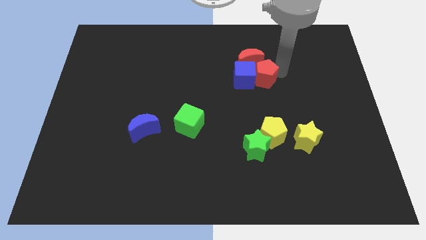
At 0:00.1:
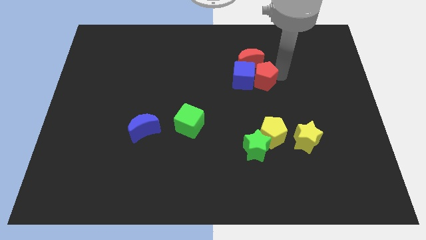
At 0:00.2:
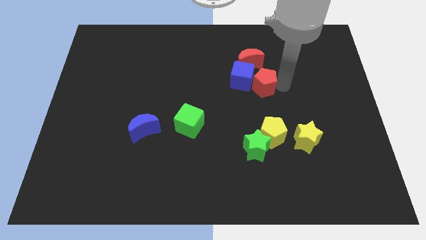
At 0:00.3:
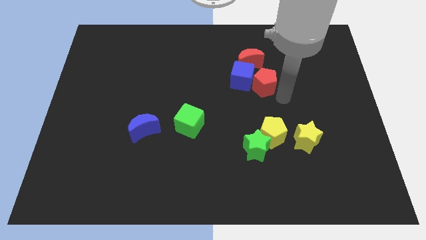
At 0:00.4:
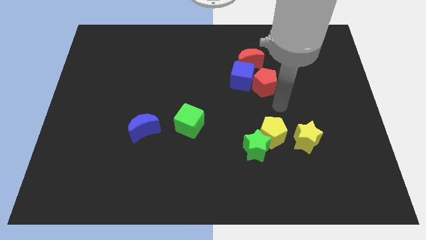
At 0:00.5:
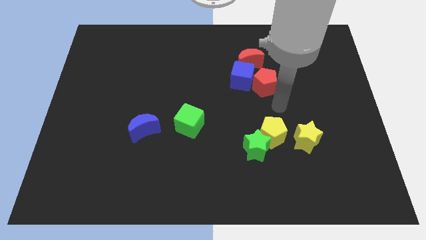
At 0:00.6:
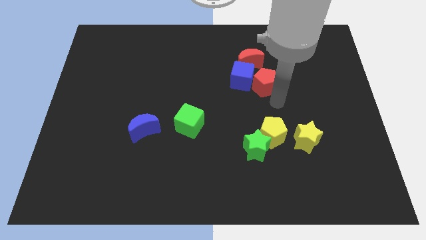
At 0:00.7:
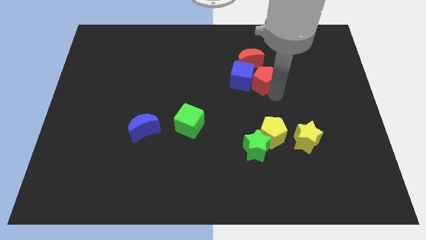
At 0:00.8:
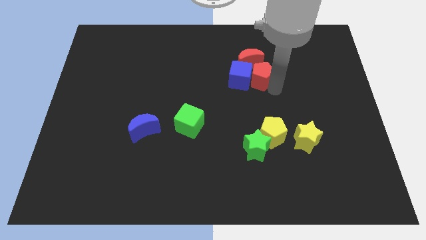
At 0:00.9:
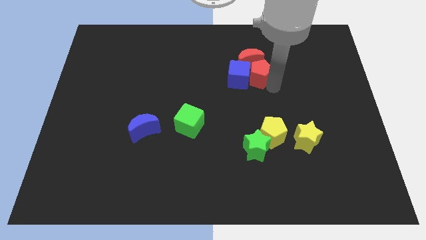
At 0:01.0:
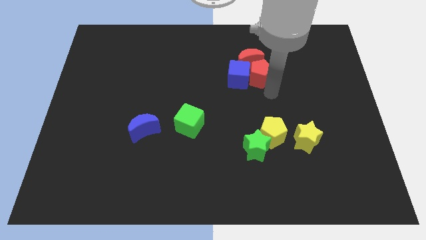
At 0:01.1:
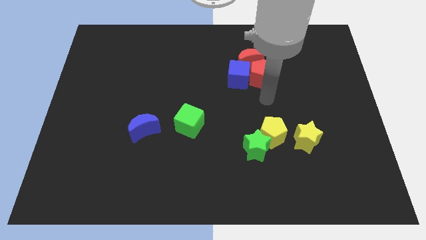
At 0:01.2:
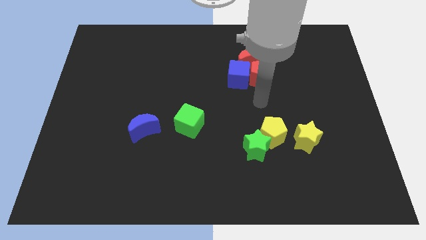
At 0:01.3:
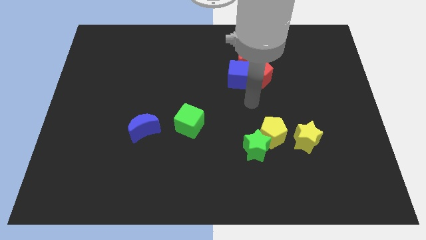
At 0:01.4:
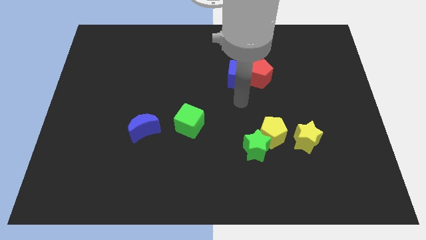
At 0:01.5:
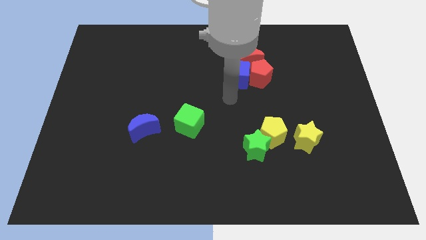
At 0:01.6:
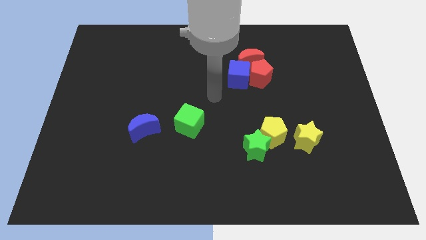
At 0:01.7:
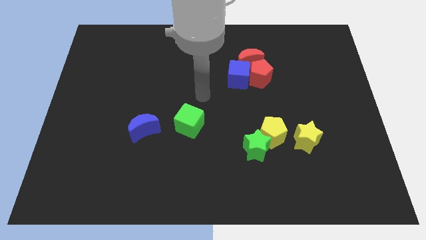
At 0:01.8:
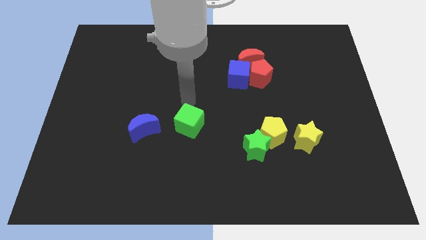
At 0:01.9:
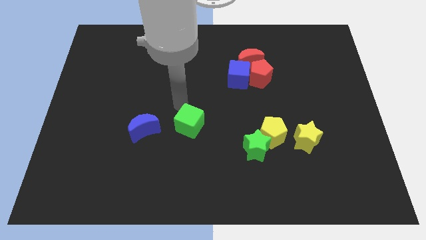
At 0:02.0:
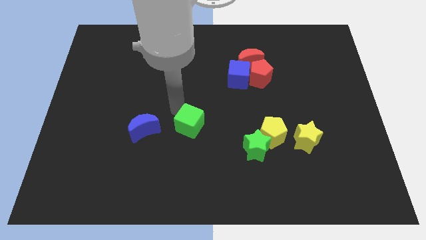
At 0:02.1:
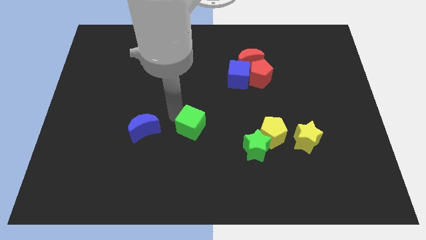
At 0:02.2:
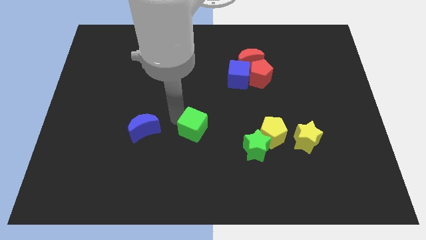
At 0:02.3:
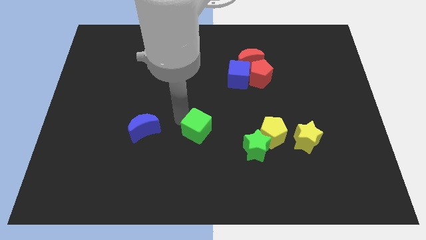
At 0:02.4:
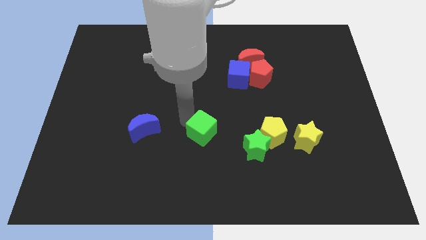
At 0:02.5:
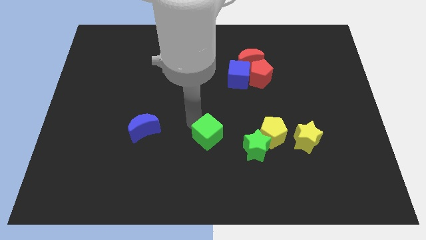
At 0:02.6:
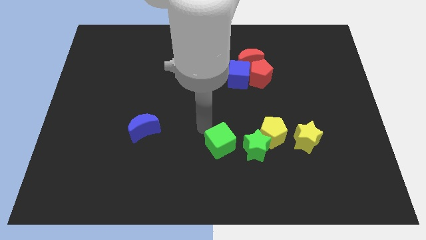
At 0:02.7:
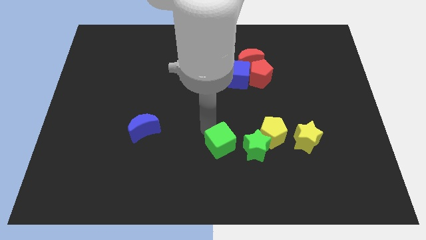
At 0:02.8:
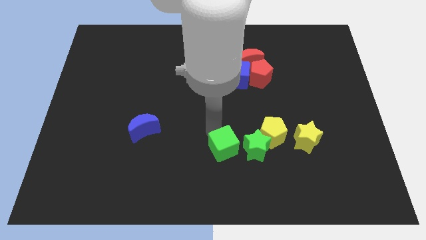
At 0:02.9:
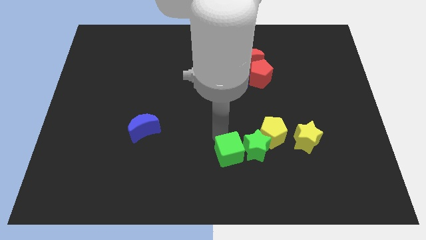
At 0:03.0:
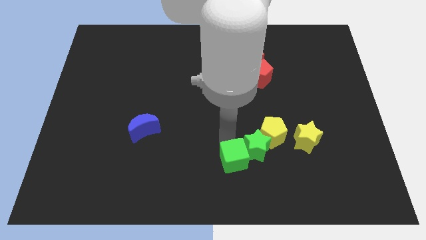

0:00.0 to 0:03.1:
attach the green cube to the green star

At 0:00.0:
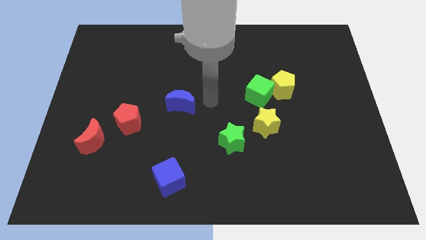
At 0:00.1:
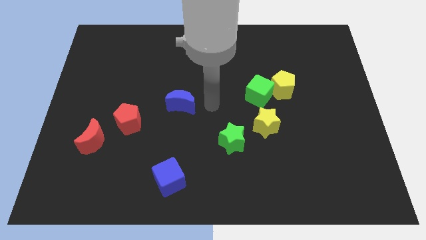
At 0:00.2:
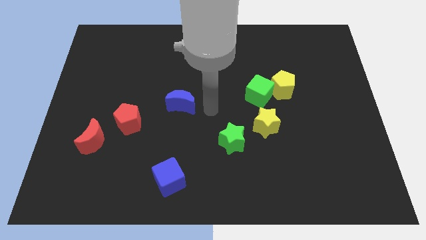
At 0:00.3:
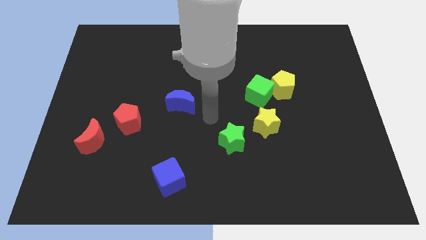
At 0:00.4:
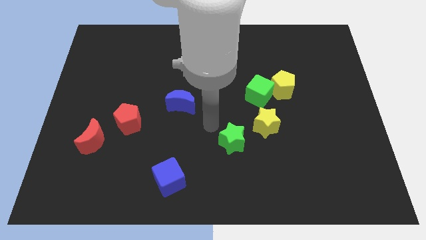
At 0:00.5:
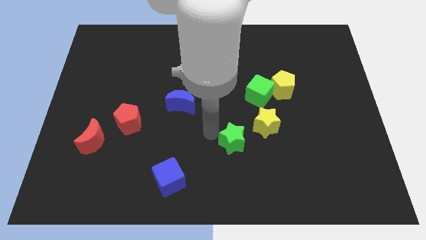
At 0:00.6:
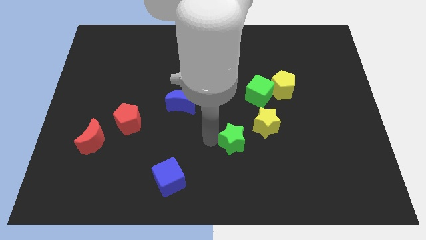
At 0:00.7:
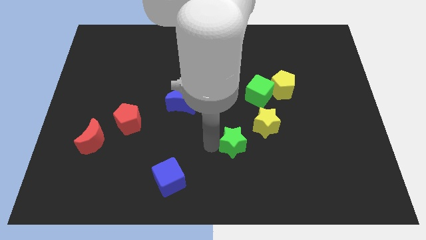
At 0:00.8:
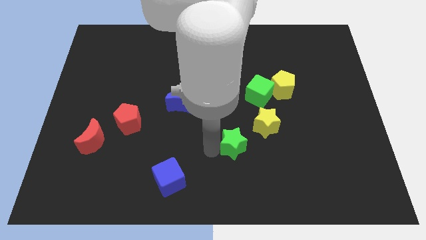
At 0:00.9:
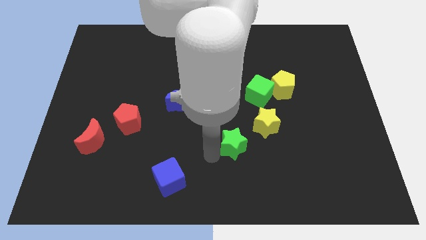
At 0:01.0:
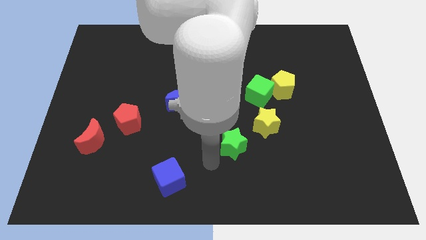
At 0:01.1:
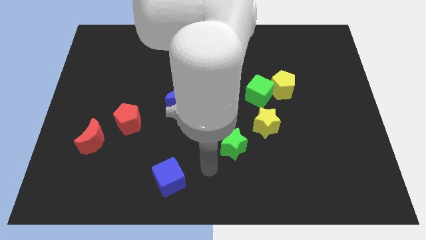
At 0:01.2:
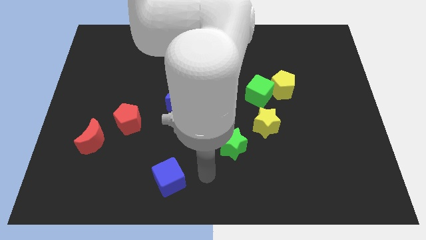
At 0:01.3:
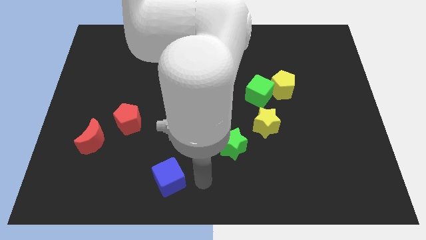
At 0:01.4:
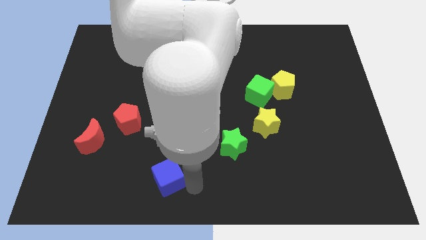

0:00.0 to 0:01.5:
slightly push the green star towards the right side of the board

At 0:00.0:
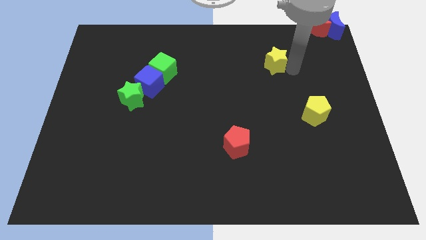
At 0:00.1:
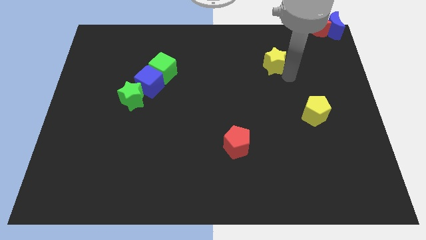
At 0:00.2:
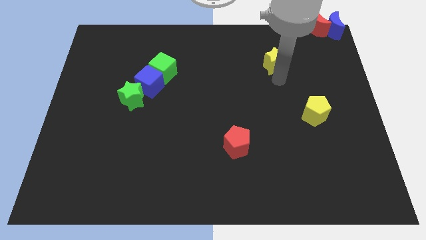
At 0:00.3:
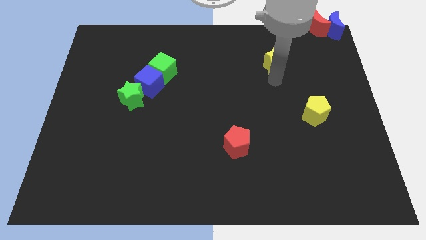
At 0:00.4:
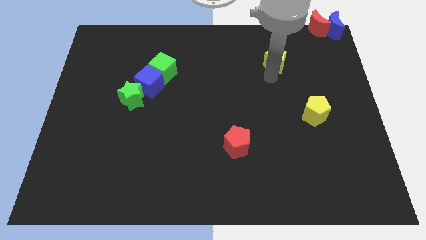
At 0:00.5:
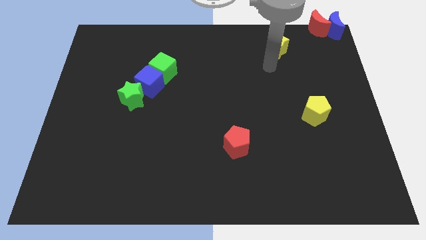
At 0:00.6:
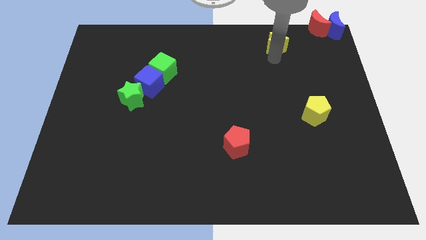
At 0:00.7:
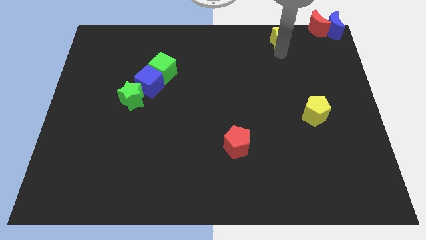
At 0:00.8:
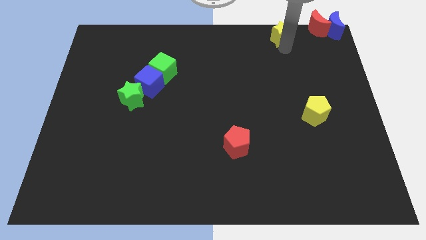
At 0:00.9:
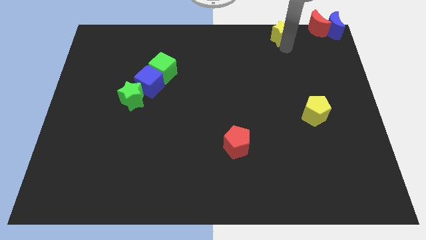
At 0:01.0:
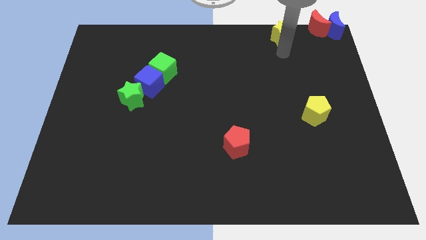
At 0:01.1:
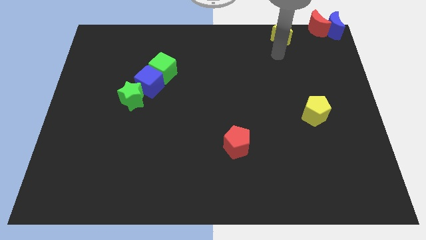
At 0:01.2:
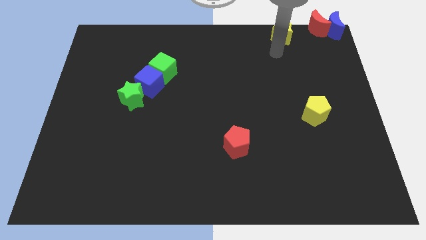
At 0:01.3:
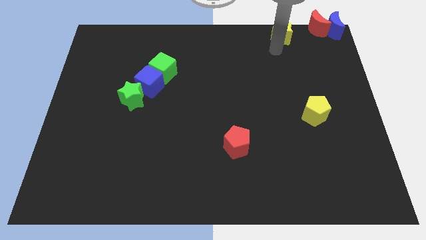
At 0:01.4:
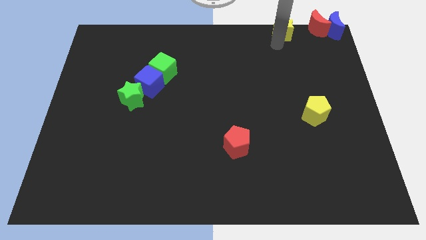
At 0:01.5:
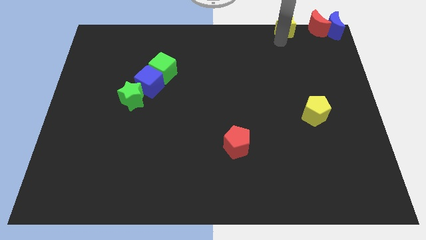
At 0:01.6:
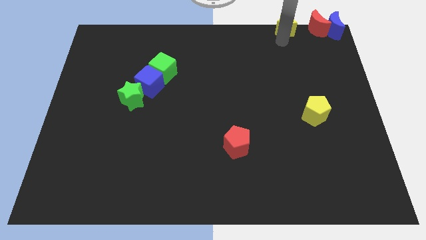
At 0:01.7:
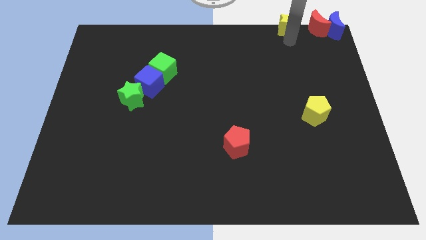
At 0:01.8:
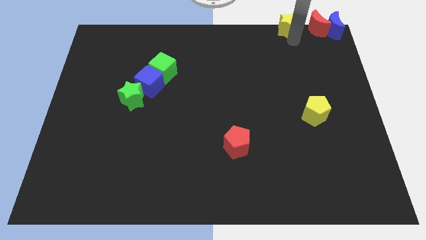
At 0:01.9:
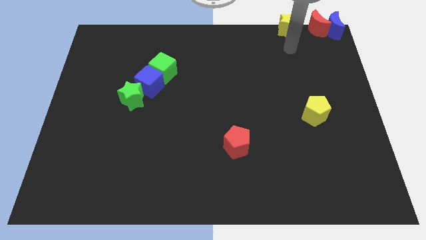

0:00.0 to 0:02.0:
place the yellow star beside the red crescent

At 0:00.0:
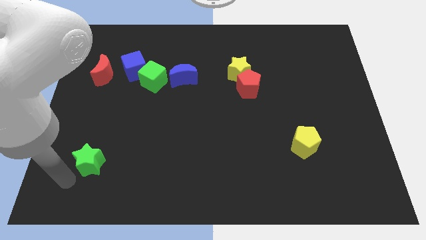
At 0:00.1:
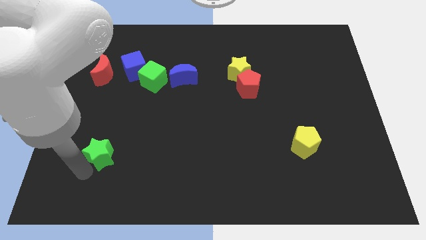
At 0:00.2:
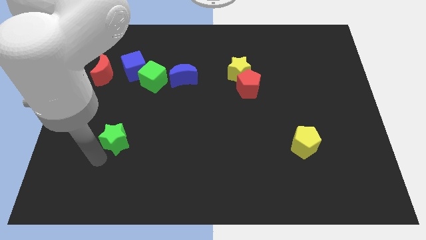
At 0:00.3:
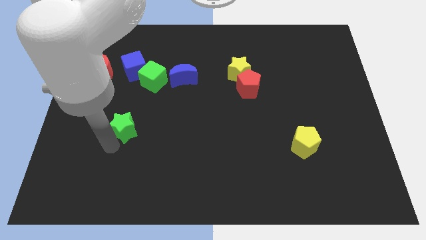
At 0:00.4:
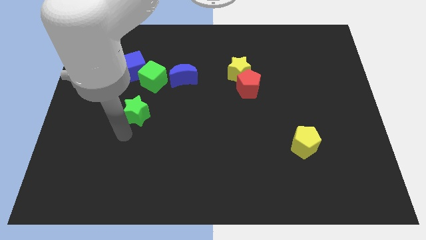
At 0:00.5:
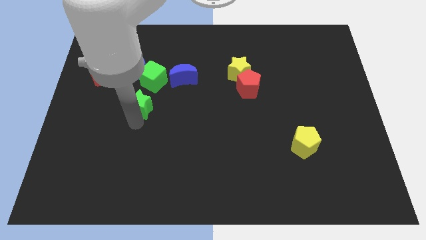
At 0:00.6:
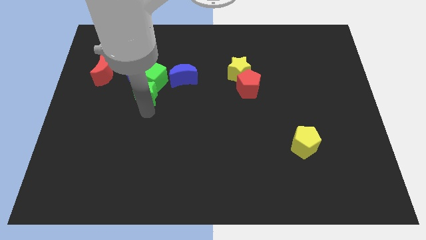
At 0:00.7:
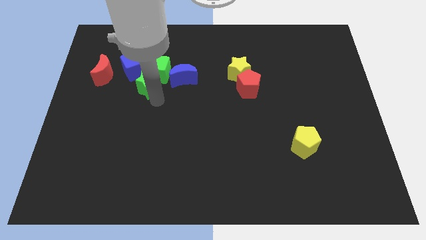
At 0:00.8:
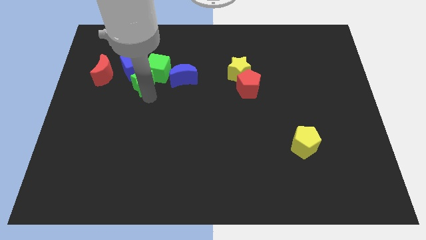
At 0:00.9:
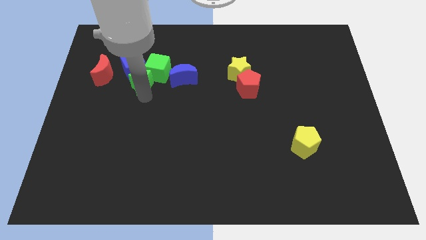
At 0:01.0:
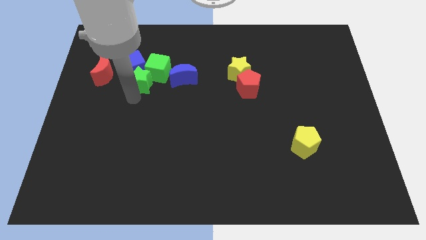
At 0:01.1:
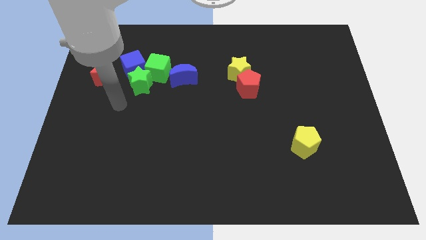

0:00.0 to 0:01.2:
put the green blocks together

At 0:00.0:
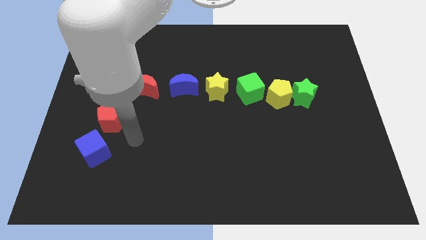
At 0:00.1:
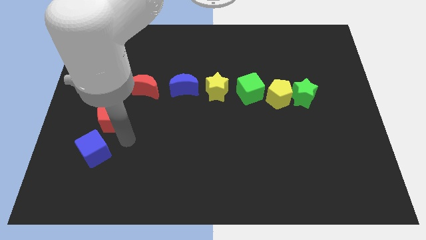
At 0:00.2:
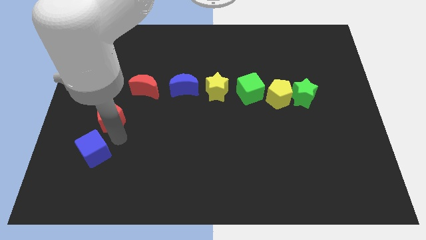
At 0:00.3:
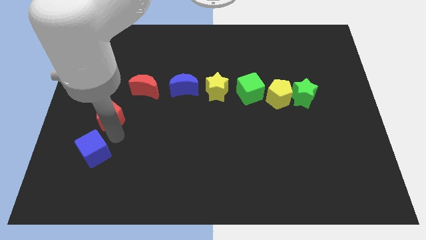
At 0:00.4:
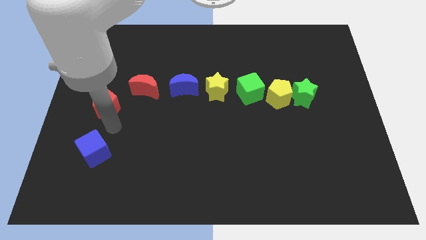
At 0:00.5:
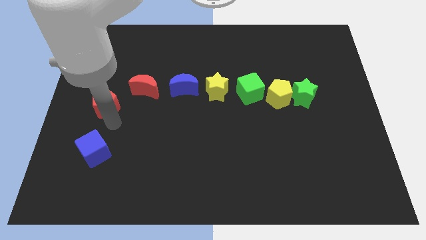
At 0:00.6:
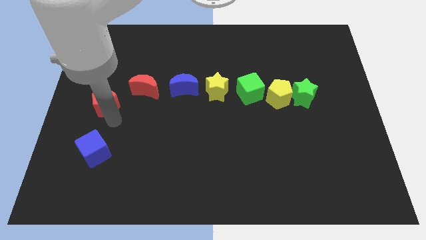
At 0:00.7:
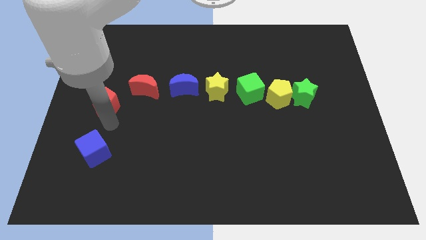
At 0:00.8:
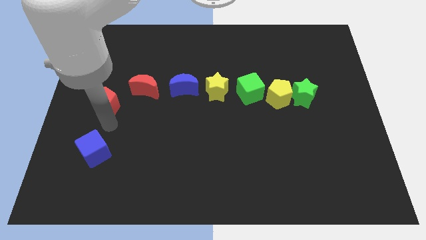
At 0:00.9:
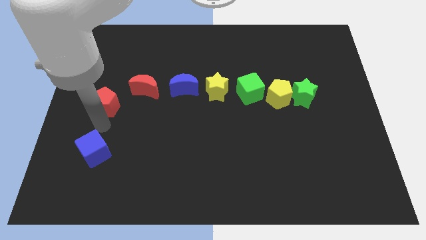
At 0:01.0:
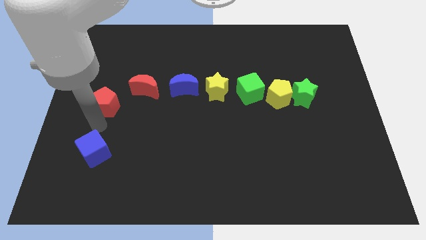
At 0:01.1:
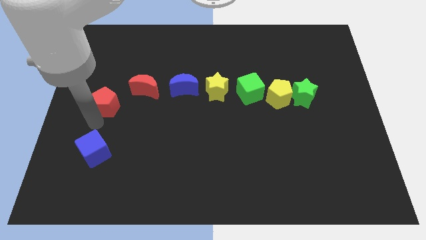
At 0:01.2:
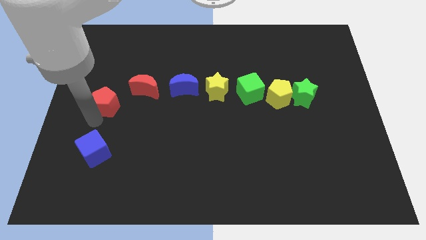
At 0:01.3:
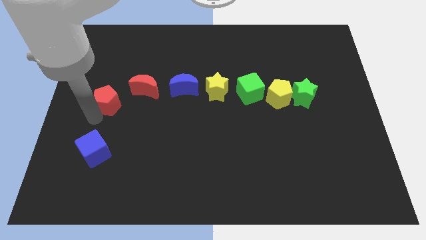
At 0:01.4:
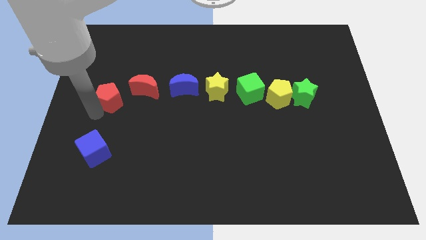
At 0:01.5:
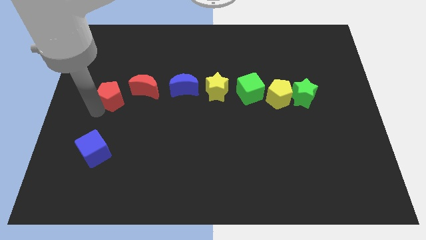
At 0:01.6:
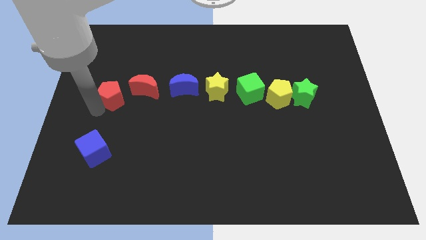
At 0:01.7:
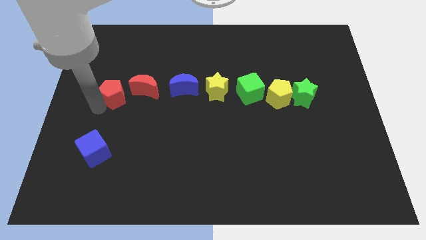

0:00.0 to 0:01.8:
move the red pentagon left to the red crescent
